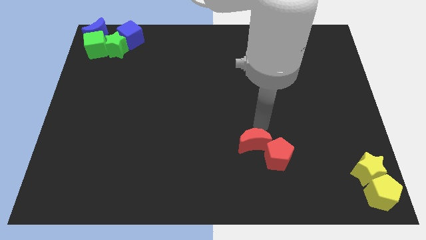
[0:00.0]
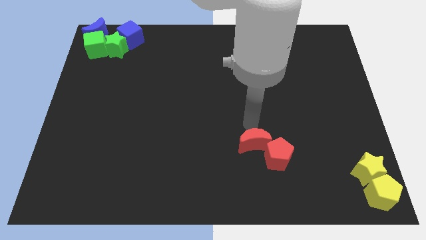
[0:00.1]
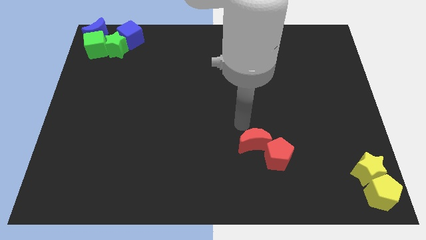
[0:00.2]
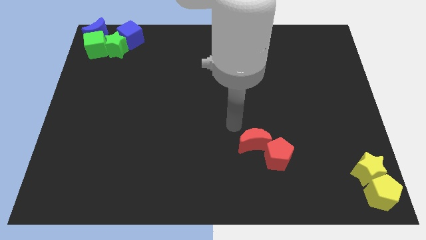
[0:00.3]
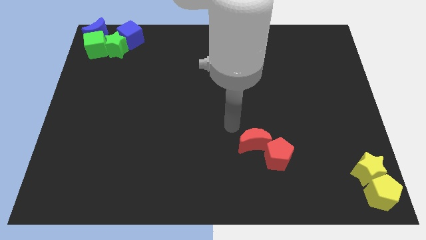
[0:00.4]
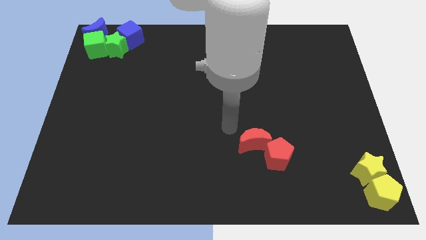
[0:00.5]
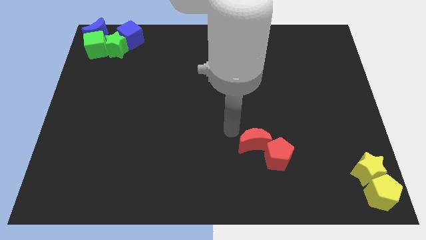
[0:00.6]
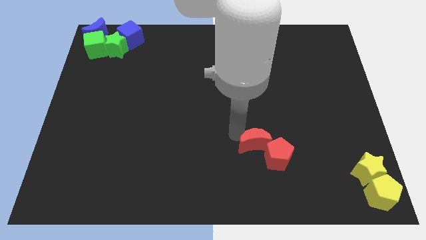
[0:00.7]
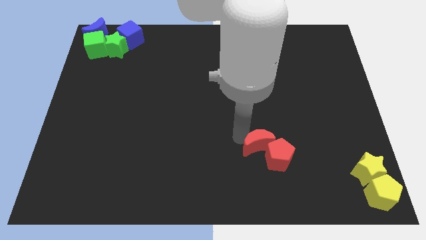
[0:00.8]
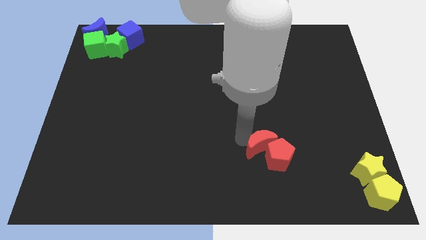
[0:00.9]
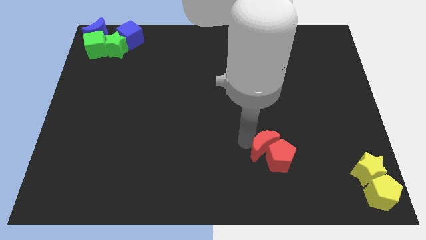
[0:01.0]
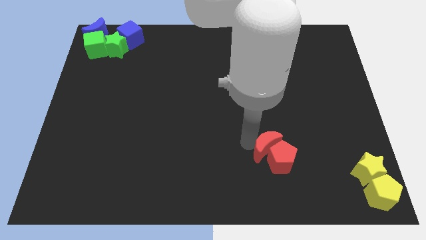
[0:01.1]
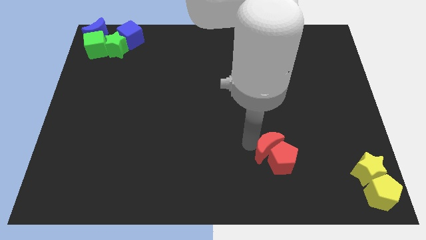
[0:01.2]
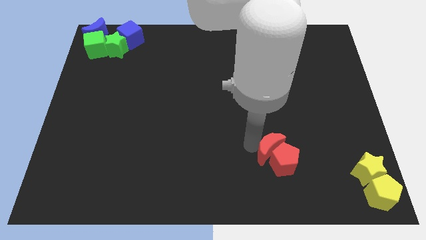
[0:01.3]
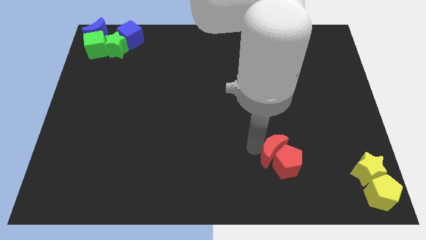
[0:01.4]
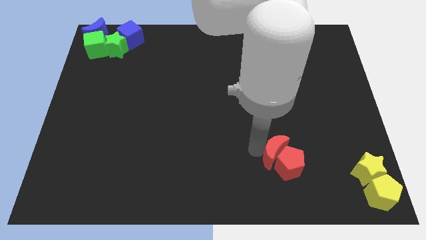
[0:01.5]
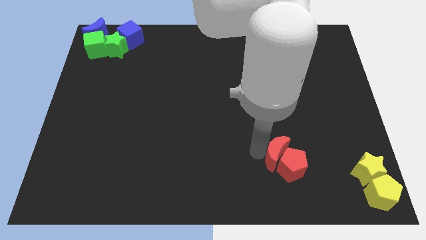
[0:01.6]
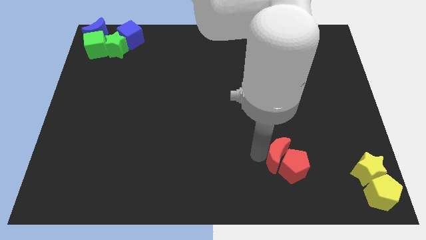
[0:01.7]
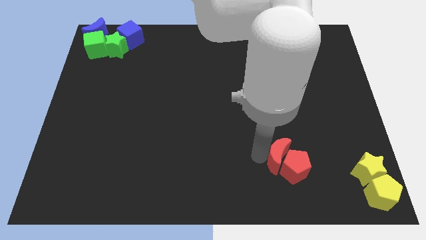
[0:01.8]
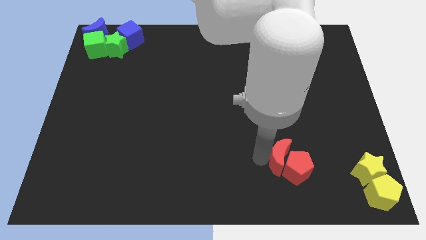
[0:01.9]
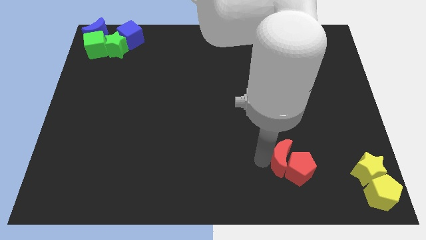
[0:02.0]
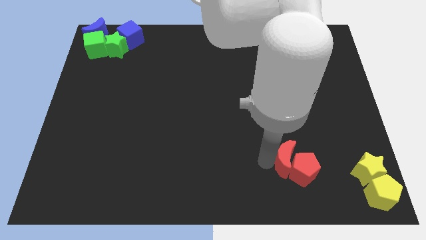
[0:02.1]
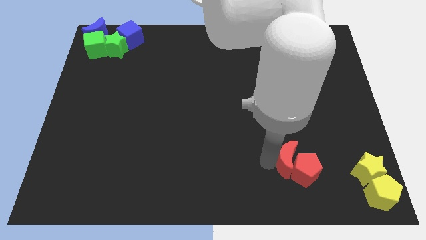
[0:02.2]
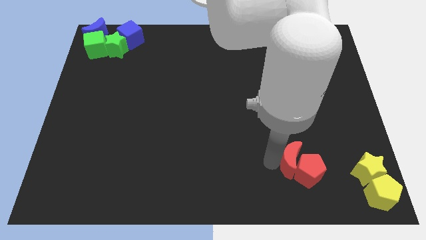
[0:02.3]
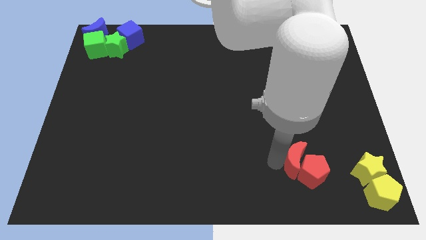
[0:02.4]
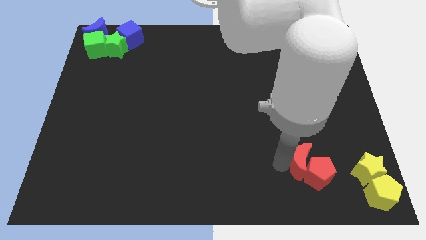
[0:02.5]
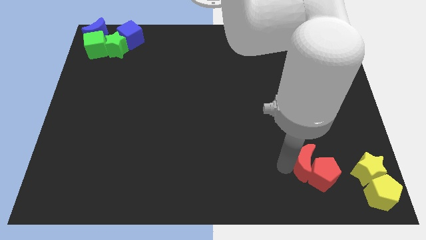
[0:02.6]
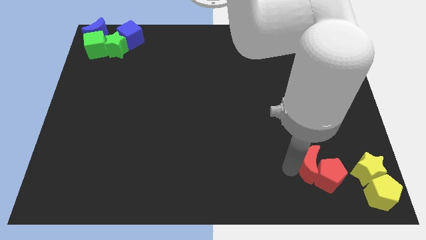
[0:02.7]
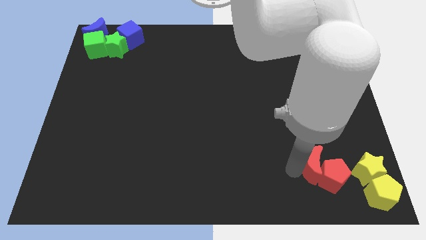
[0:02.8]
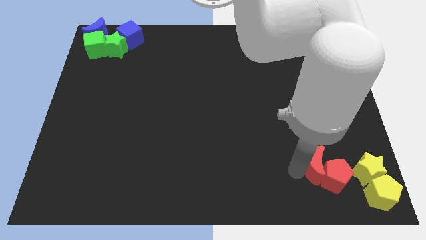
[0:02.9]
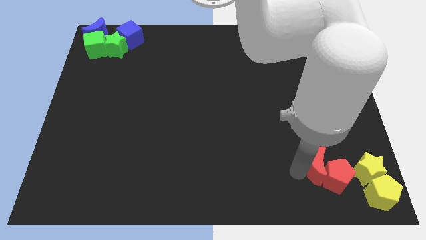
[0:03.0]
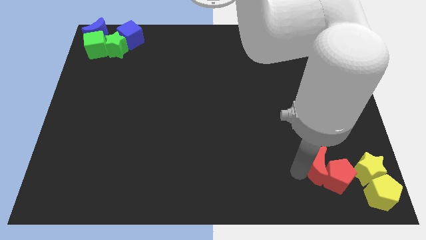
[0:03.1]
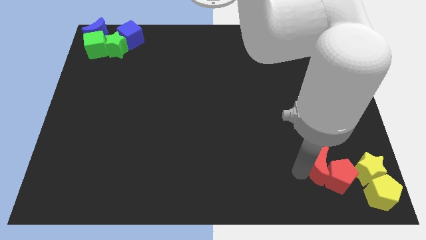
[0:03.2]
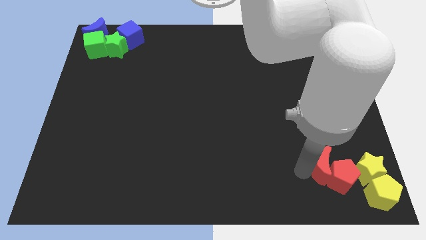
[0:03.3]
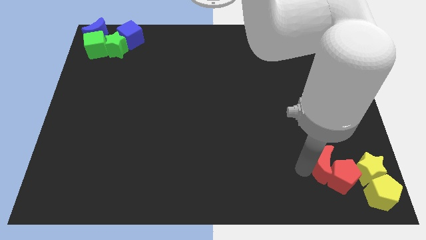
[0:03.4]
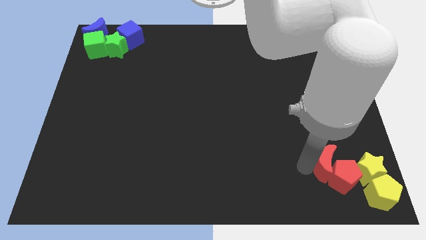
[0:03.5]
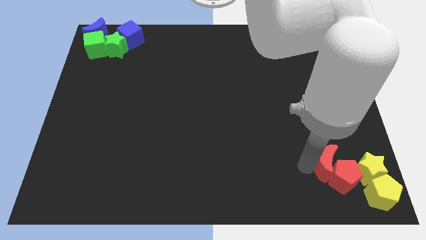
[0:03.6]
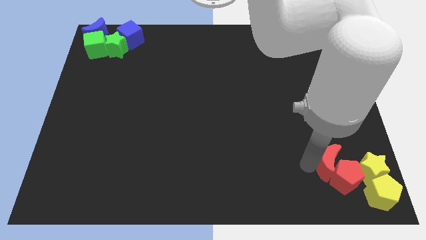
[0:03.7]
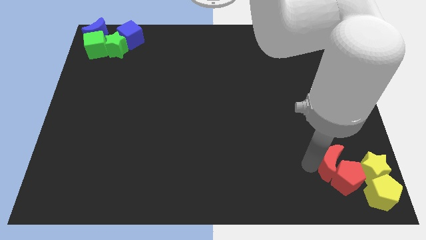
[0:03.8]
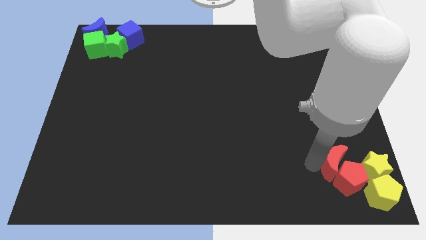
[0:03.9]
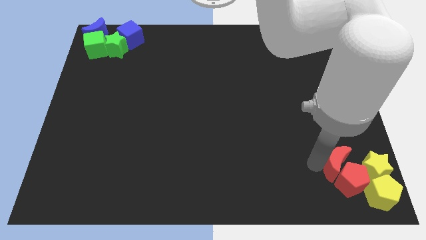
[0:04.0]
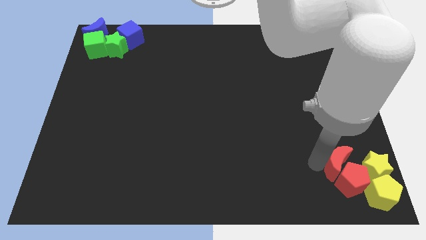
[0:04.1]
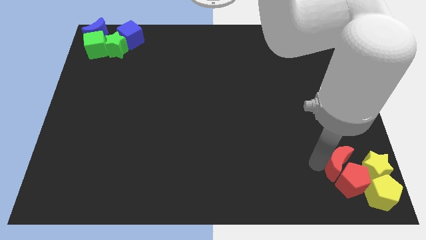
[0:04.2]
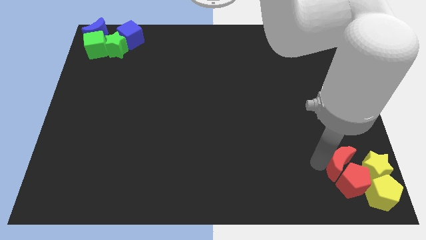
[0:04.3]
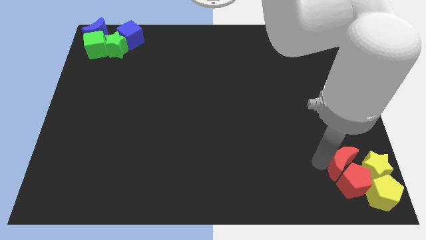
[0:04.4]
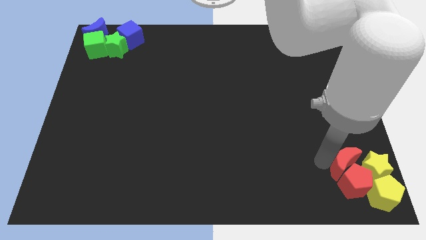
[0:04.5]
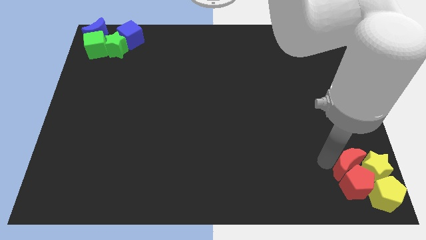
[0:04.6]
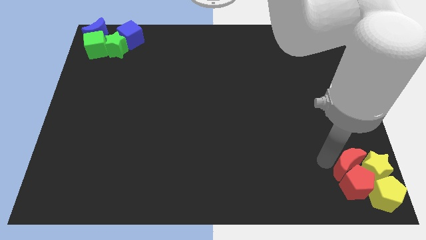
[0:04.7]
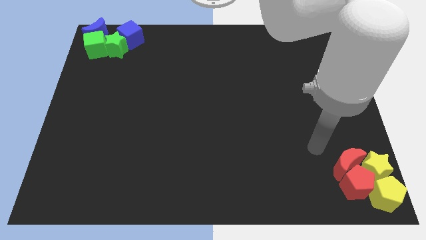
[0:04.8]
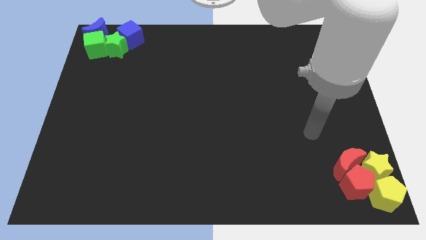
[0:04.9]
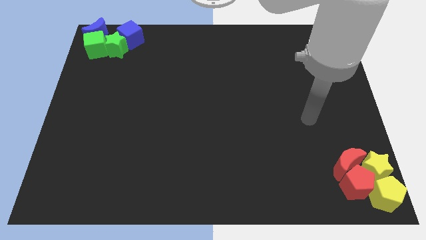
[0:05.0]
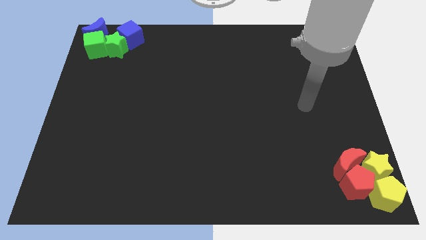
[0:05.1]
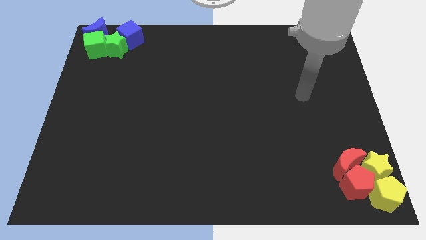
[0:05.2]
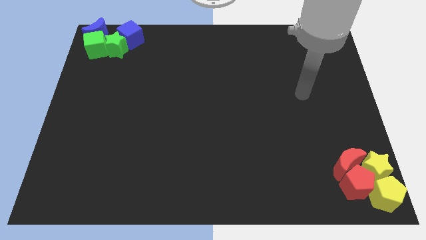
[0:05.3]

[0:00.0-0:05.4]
move the red crescent along with red pentagon to the right bottom of the board

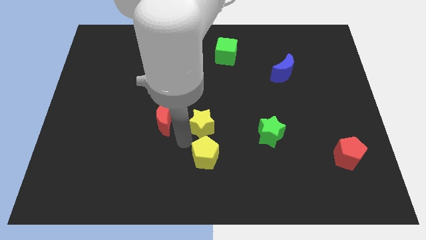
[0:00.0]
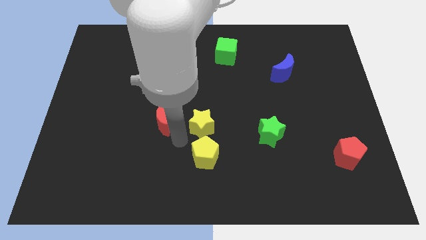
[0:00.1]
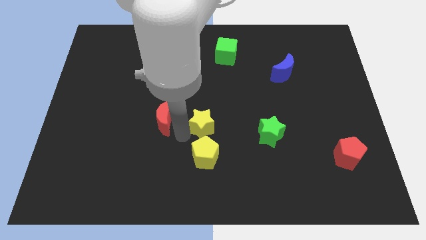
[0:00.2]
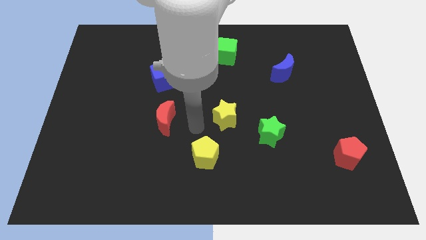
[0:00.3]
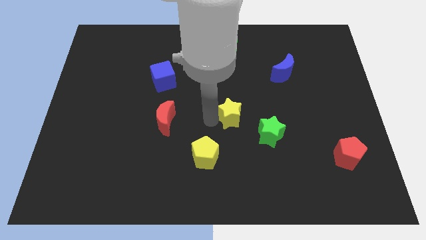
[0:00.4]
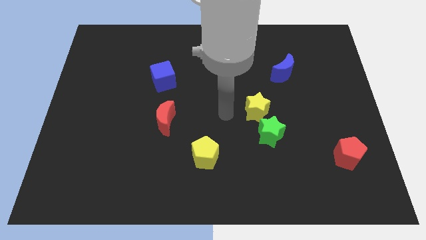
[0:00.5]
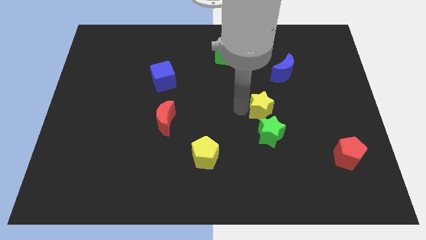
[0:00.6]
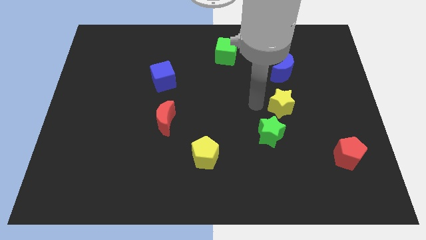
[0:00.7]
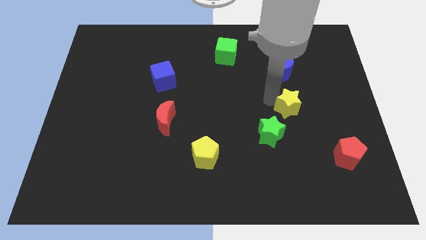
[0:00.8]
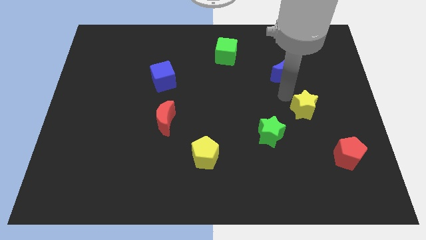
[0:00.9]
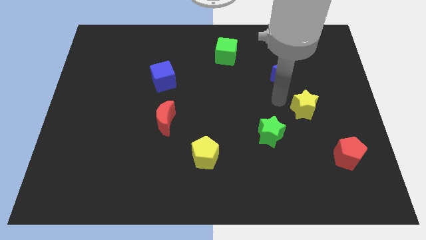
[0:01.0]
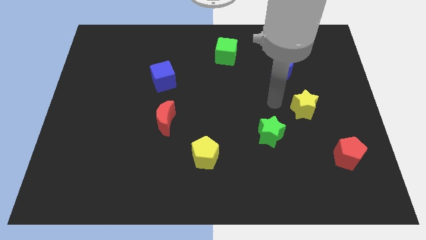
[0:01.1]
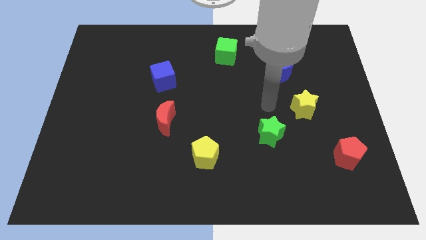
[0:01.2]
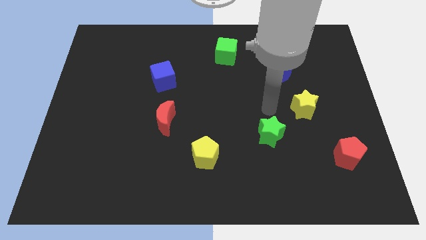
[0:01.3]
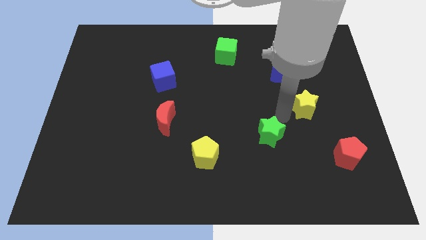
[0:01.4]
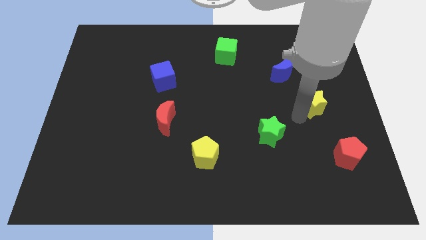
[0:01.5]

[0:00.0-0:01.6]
move the yellow star towards the center right side of the board

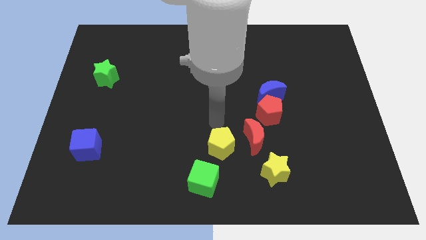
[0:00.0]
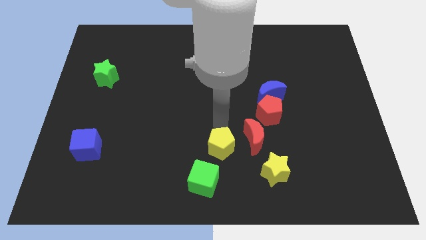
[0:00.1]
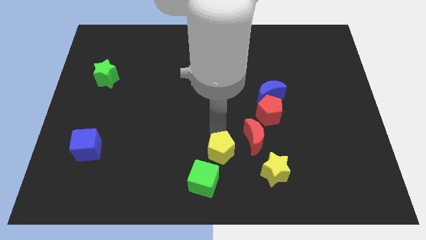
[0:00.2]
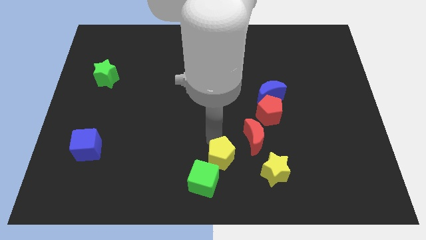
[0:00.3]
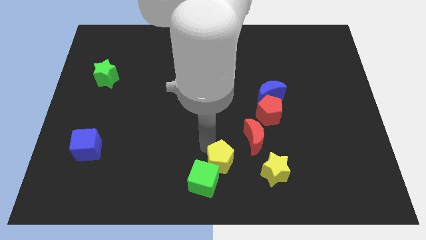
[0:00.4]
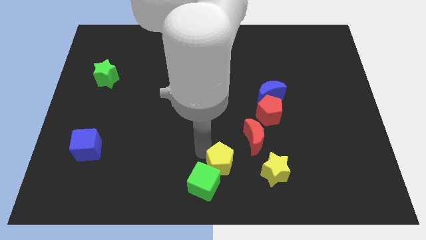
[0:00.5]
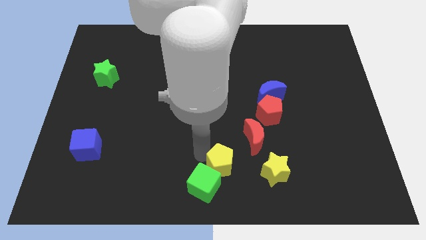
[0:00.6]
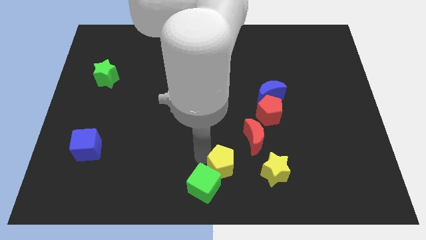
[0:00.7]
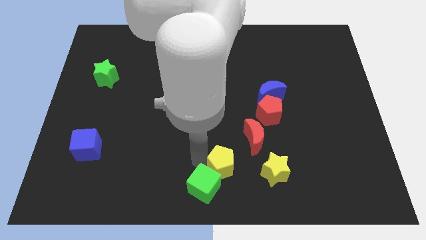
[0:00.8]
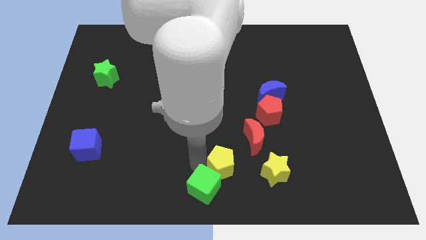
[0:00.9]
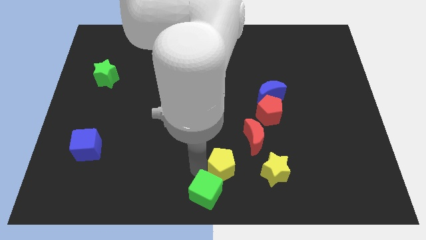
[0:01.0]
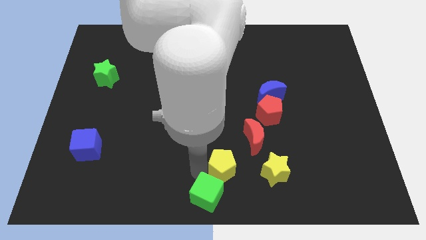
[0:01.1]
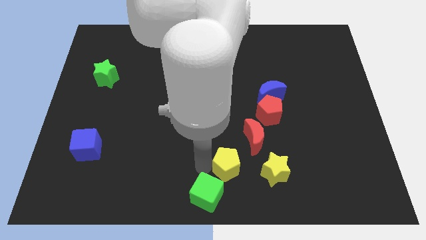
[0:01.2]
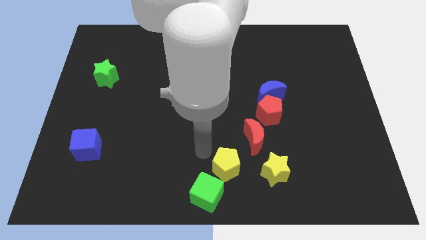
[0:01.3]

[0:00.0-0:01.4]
push the yellow pentagon and green cube to the bottom center of the board

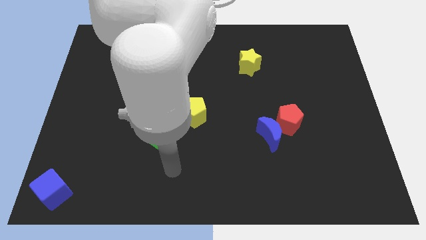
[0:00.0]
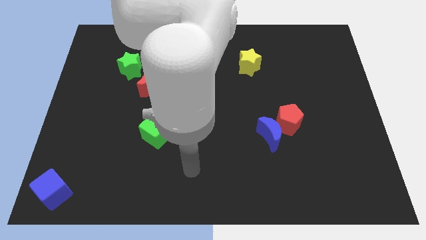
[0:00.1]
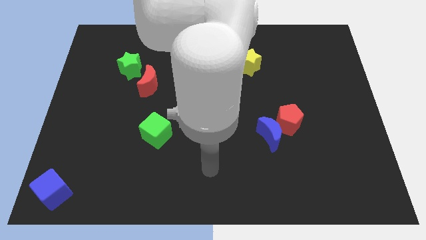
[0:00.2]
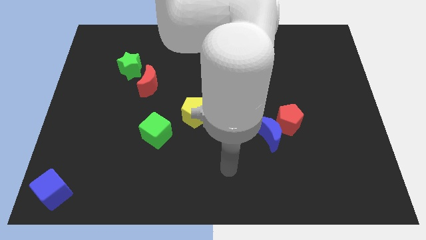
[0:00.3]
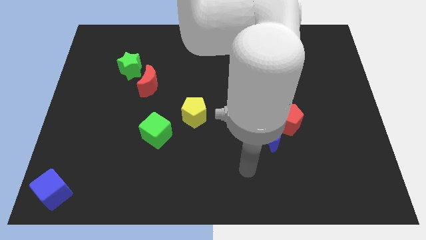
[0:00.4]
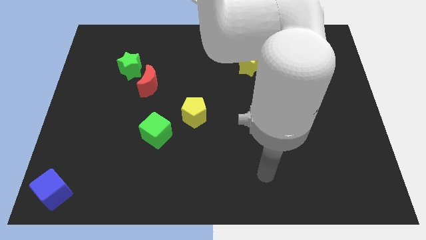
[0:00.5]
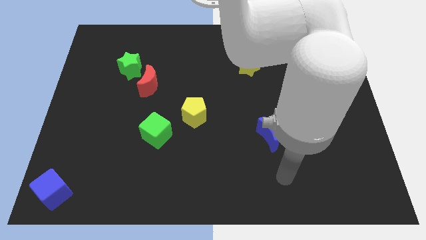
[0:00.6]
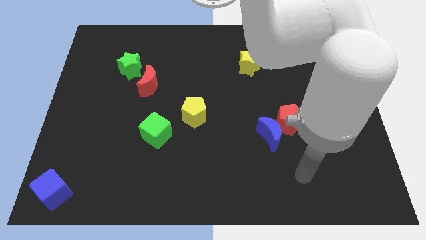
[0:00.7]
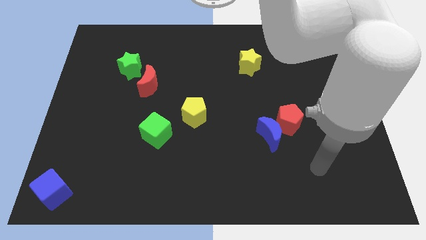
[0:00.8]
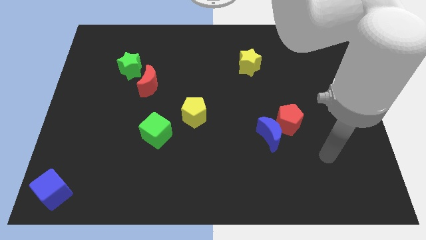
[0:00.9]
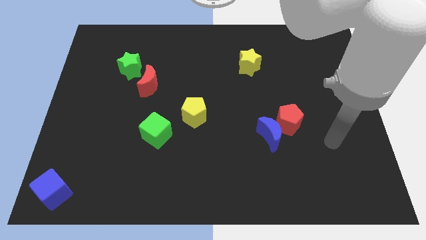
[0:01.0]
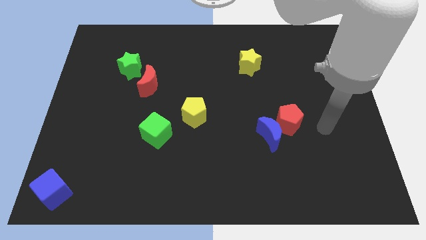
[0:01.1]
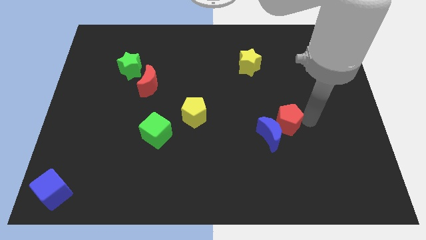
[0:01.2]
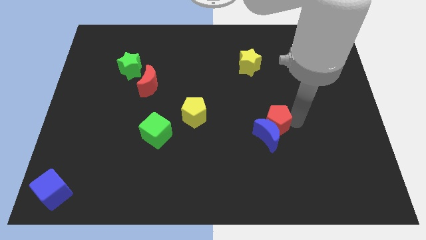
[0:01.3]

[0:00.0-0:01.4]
move your arm towards the red pentagon
